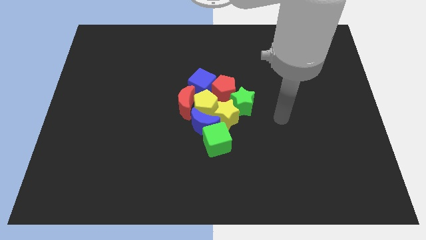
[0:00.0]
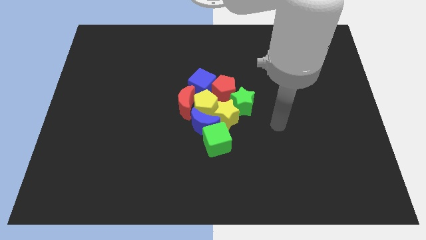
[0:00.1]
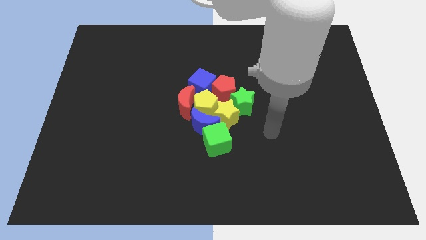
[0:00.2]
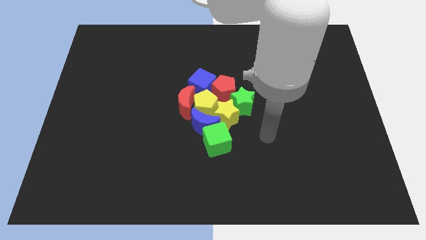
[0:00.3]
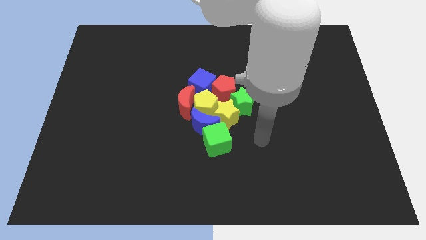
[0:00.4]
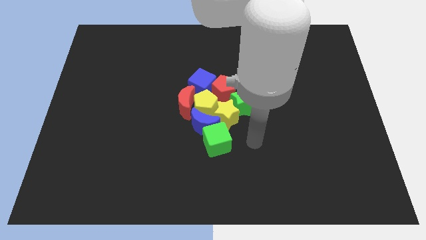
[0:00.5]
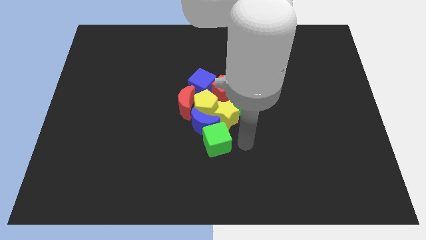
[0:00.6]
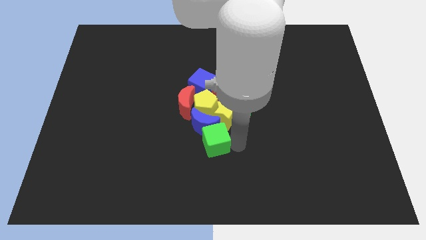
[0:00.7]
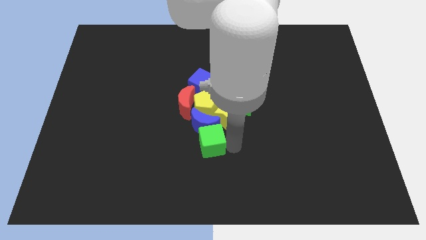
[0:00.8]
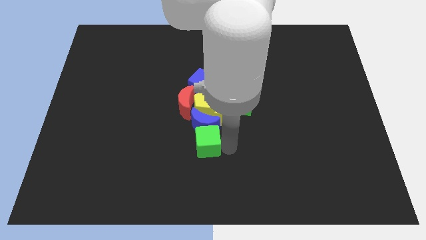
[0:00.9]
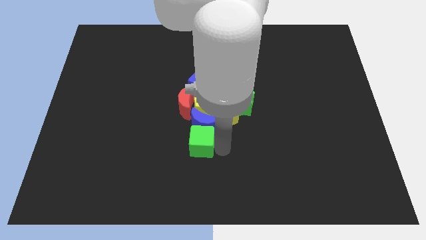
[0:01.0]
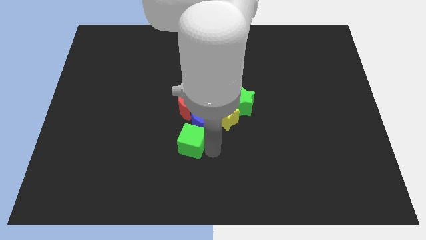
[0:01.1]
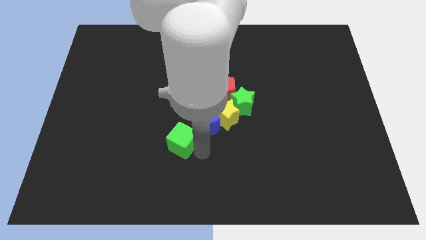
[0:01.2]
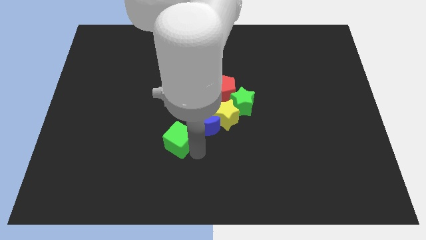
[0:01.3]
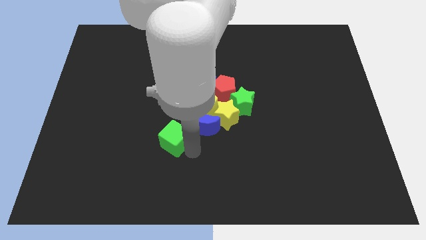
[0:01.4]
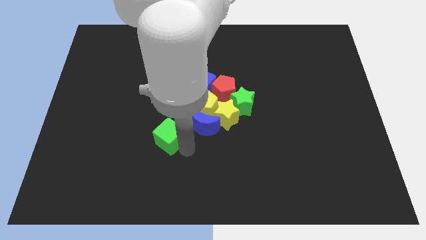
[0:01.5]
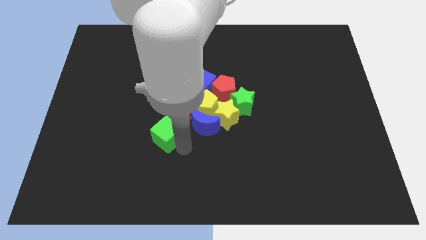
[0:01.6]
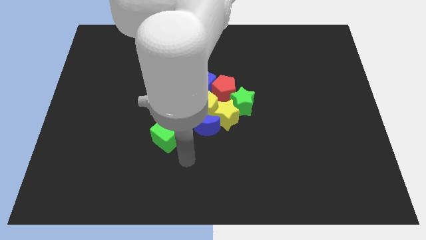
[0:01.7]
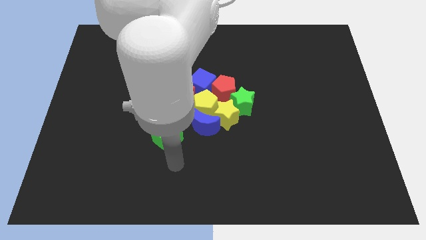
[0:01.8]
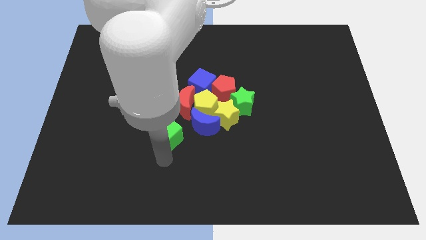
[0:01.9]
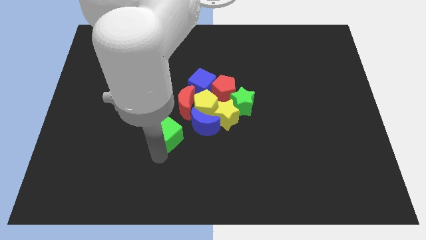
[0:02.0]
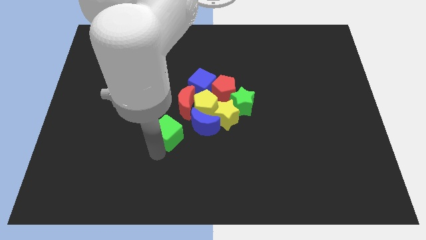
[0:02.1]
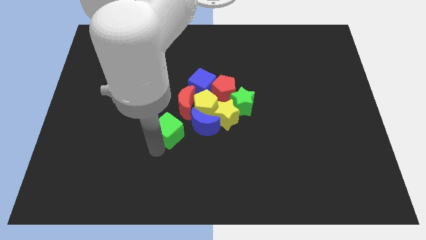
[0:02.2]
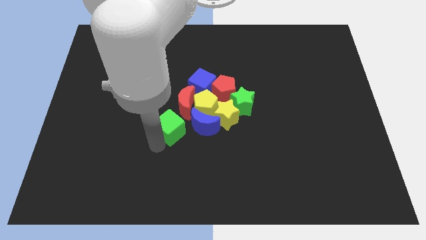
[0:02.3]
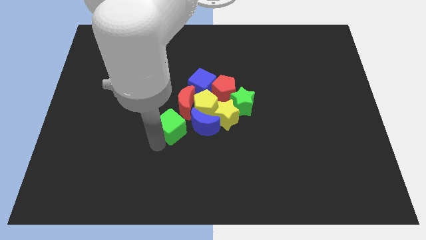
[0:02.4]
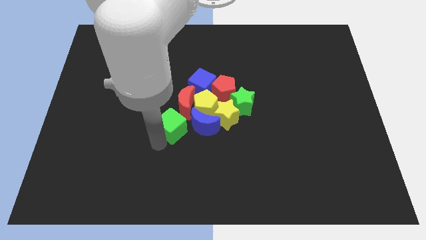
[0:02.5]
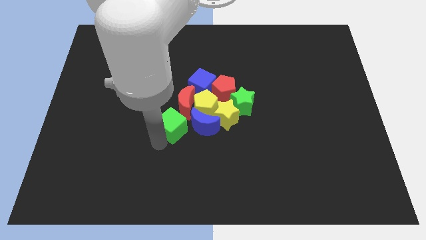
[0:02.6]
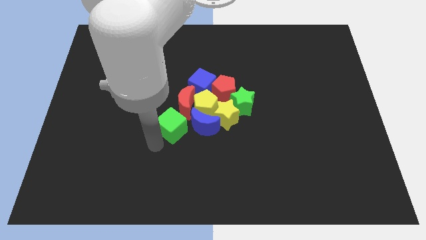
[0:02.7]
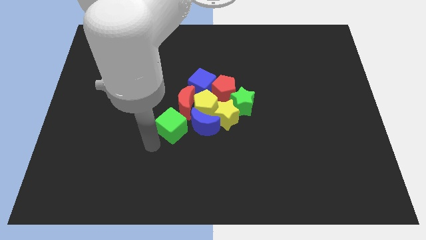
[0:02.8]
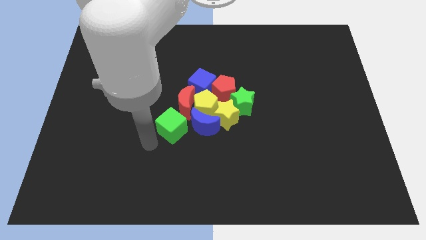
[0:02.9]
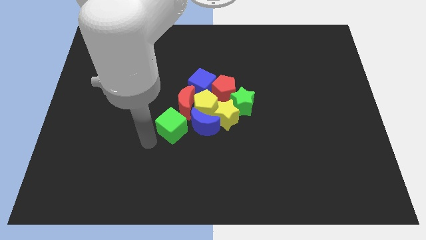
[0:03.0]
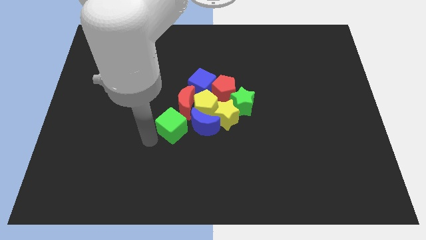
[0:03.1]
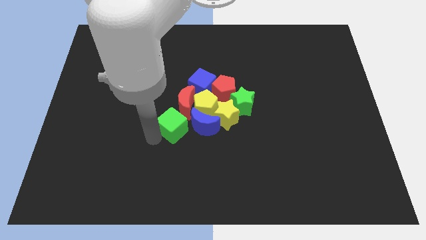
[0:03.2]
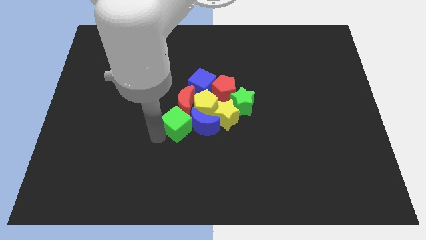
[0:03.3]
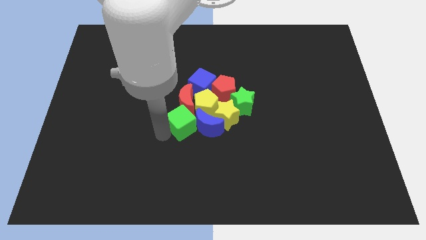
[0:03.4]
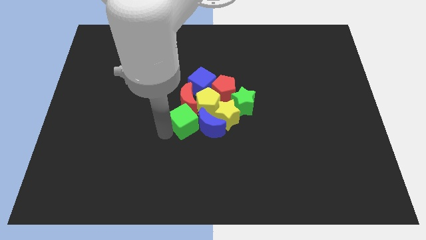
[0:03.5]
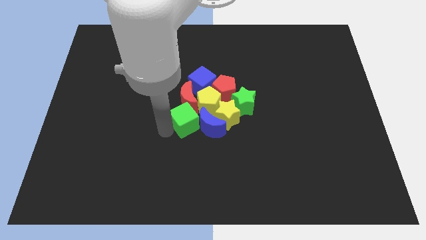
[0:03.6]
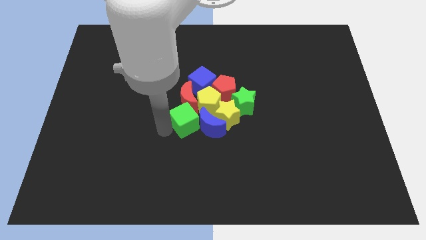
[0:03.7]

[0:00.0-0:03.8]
push the green cube into the red moon

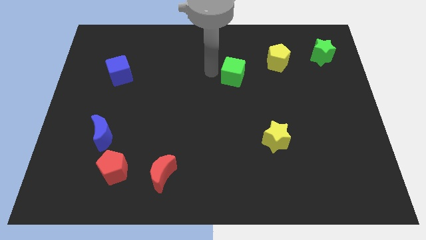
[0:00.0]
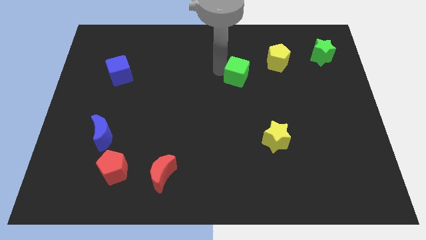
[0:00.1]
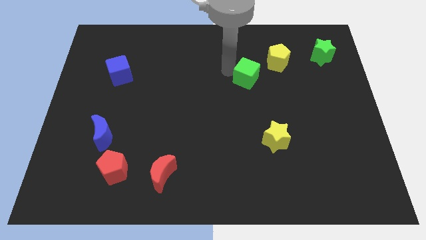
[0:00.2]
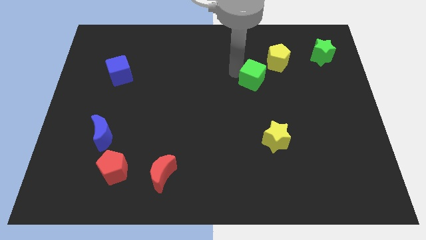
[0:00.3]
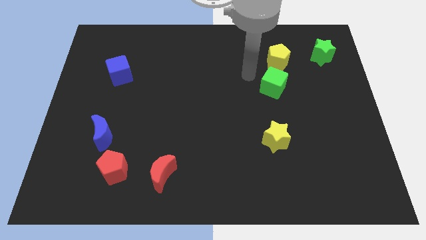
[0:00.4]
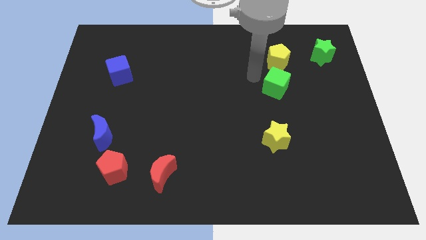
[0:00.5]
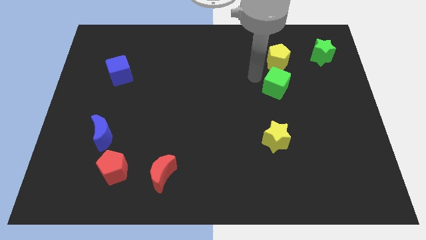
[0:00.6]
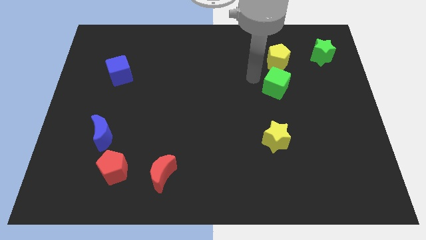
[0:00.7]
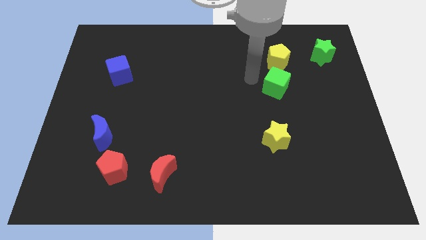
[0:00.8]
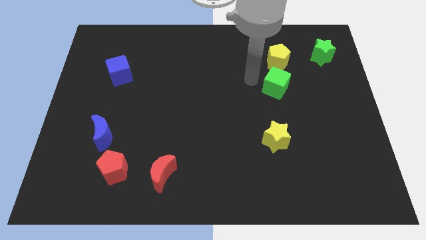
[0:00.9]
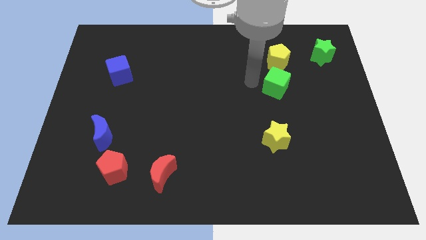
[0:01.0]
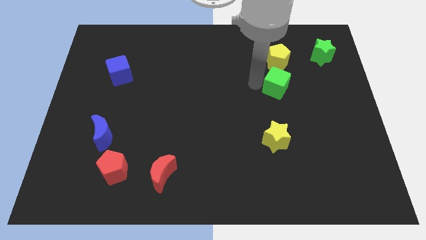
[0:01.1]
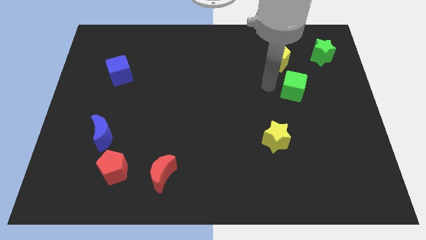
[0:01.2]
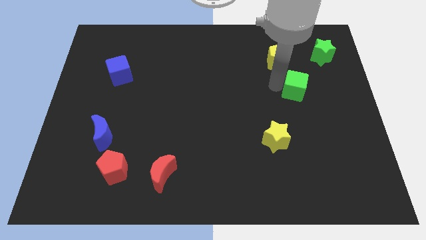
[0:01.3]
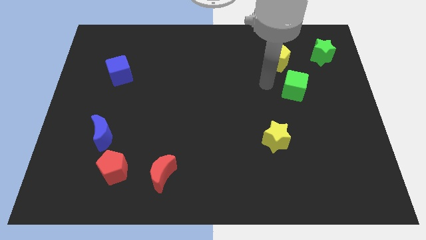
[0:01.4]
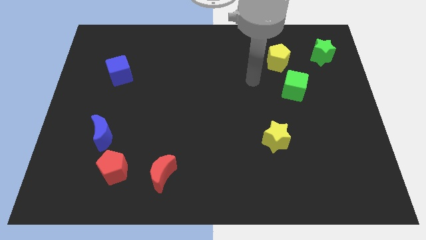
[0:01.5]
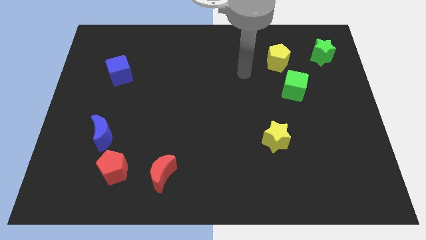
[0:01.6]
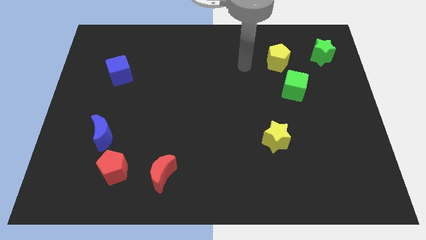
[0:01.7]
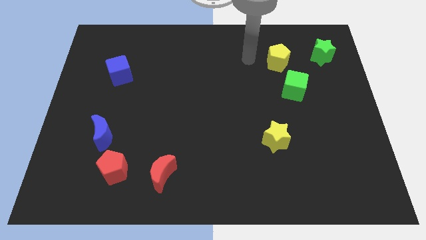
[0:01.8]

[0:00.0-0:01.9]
push the green cube towards right of the board

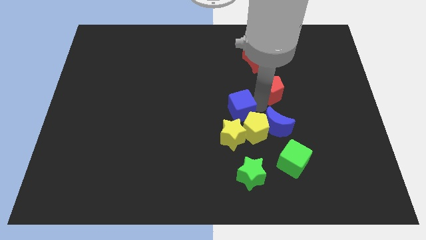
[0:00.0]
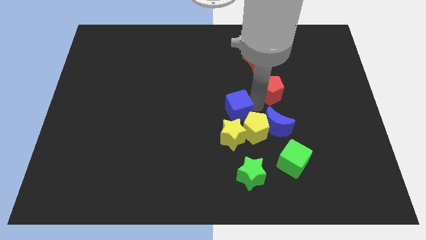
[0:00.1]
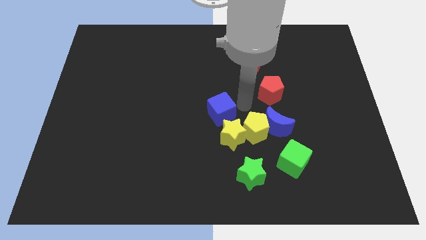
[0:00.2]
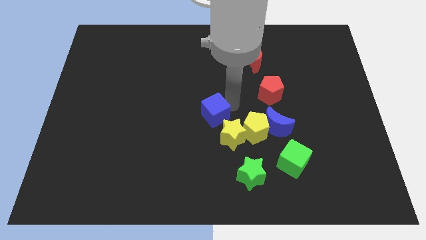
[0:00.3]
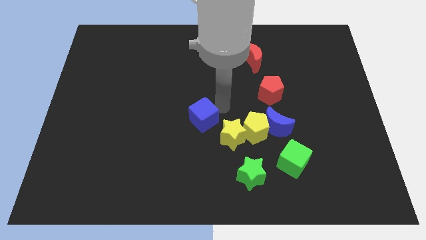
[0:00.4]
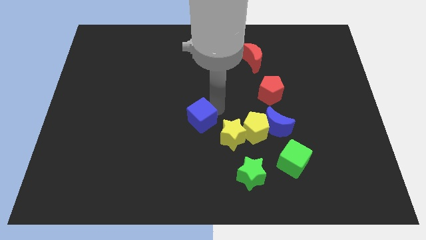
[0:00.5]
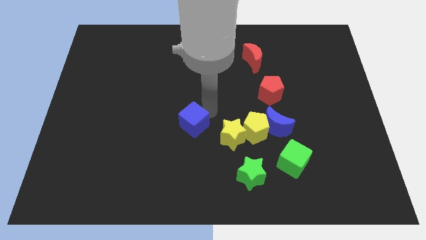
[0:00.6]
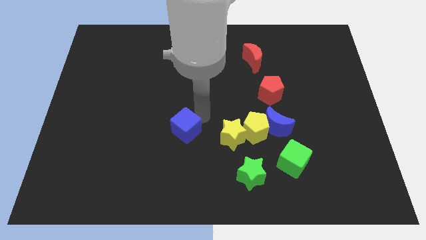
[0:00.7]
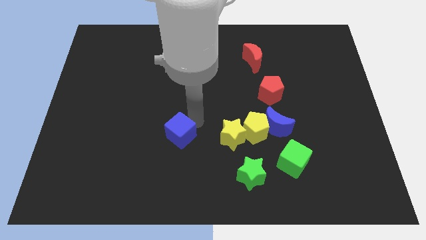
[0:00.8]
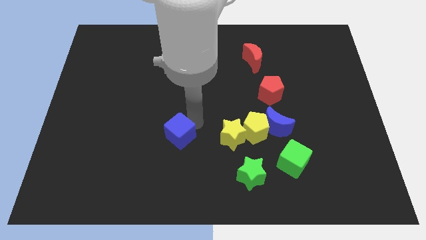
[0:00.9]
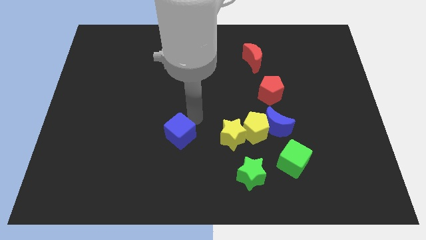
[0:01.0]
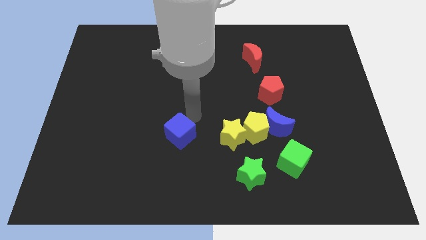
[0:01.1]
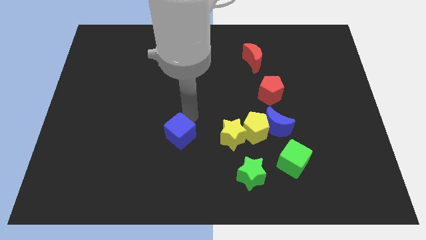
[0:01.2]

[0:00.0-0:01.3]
move the blue cube to the left of the yellow star

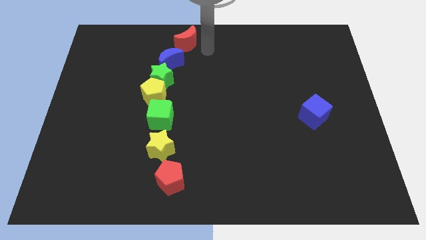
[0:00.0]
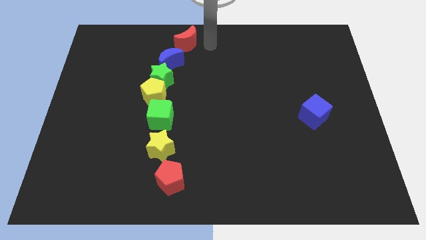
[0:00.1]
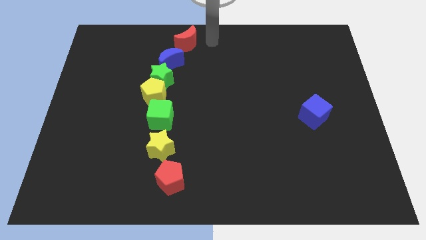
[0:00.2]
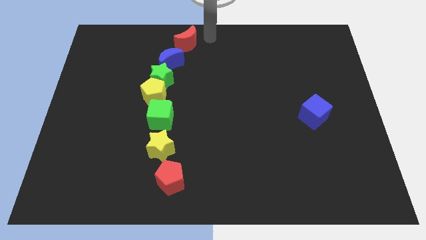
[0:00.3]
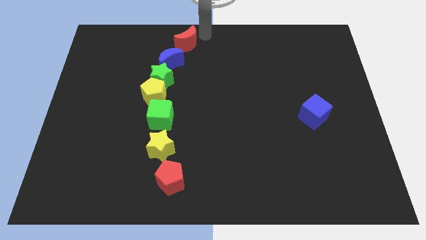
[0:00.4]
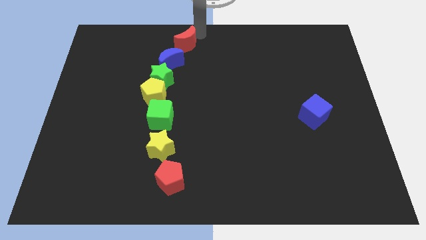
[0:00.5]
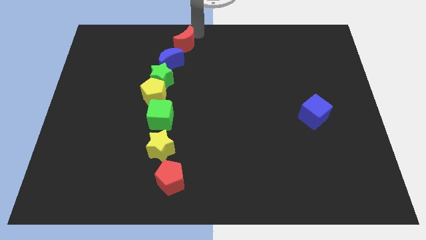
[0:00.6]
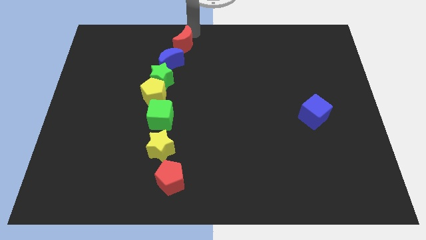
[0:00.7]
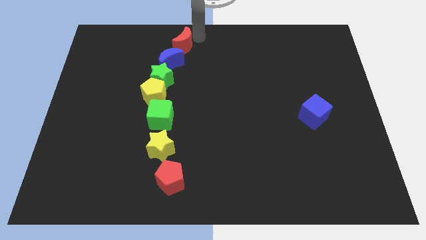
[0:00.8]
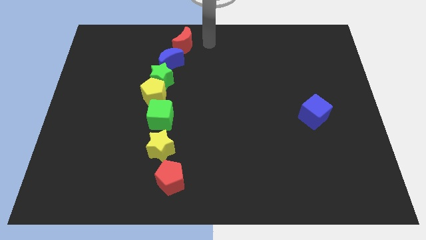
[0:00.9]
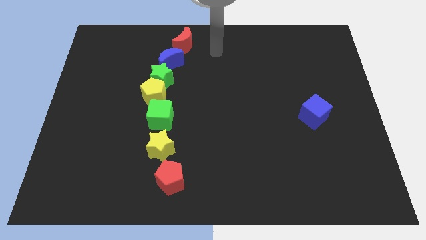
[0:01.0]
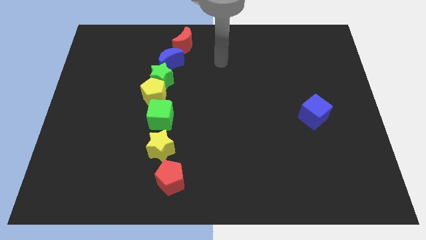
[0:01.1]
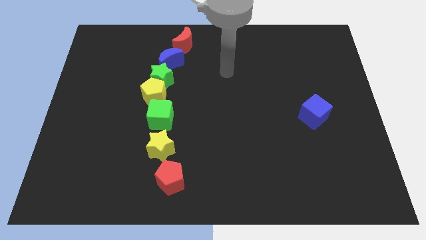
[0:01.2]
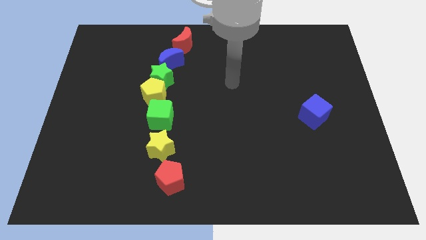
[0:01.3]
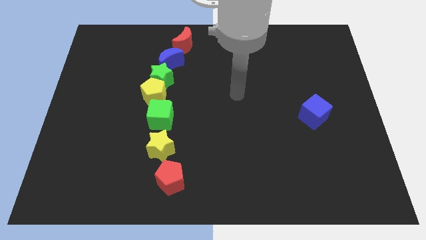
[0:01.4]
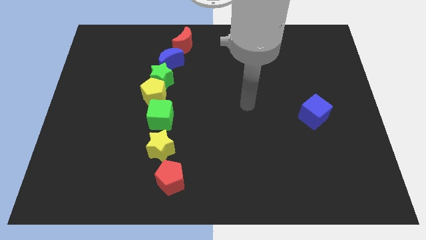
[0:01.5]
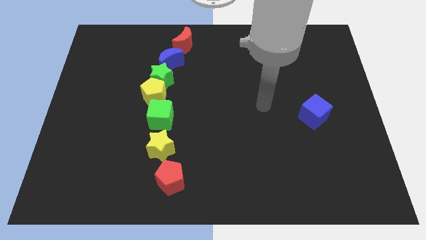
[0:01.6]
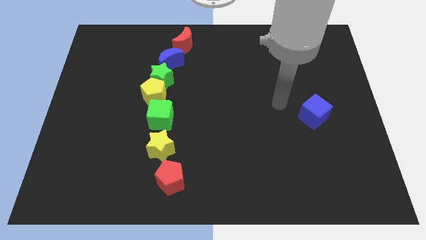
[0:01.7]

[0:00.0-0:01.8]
move the arm vertically downwards towards the center right side

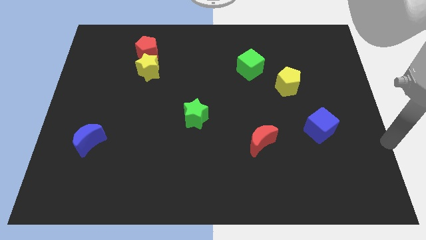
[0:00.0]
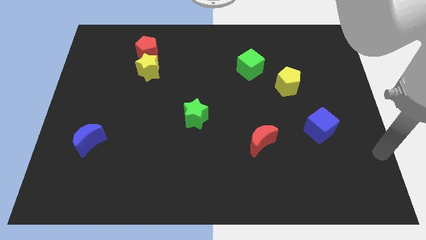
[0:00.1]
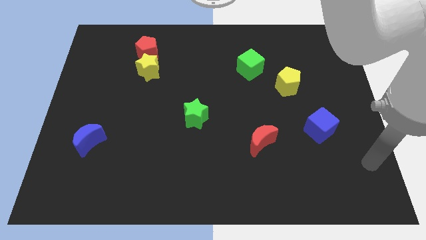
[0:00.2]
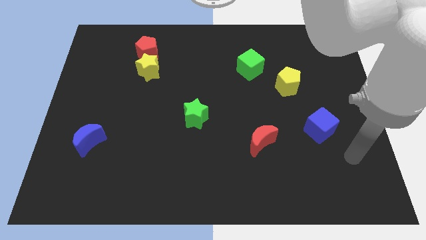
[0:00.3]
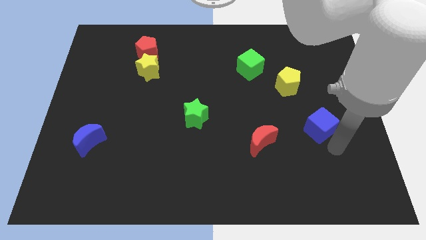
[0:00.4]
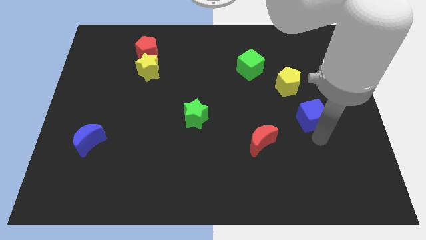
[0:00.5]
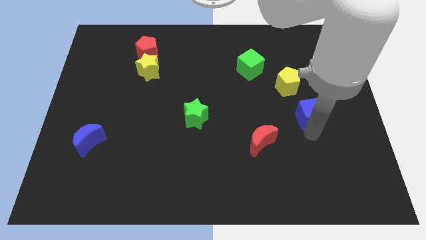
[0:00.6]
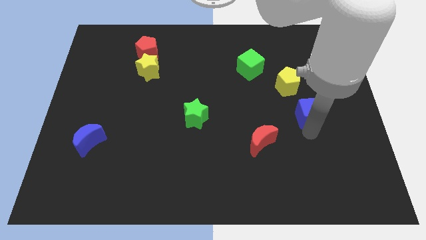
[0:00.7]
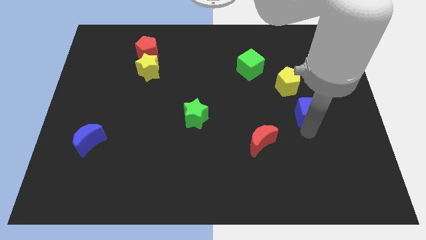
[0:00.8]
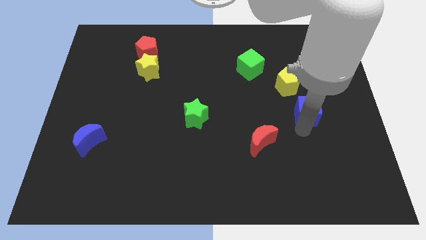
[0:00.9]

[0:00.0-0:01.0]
place the blue cube below the yellow pentagon
